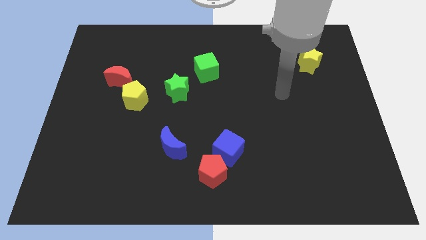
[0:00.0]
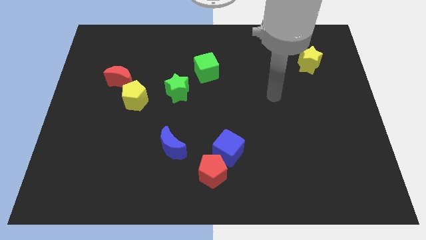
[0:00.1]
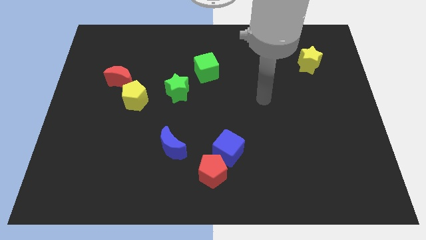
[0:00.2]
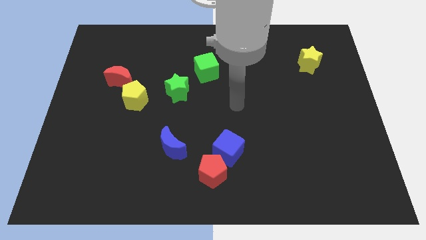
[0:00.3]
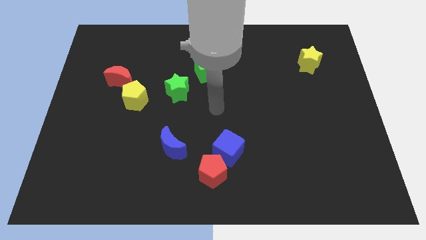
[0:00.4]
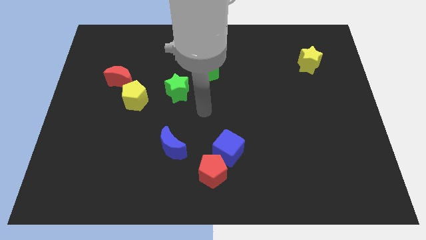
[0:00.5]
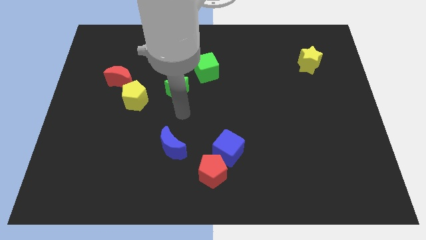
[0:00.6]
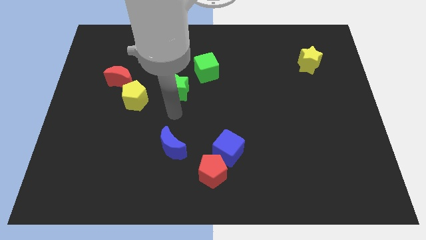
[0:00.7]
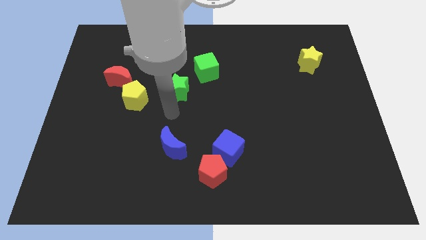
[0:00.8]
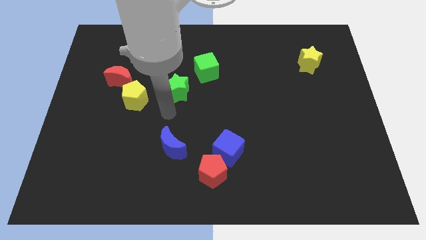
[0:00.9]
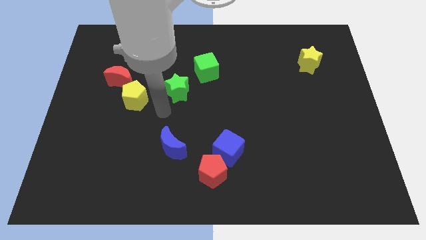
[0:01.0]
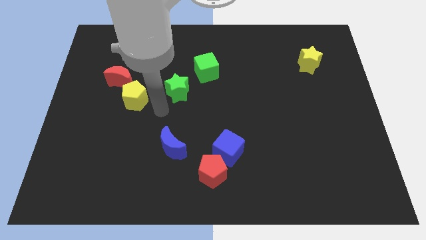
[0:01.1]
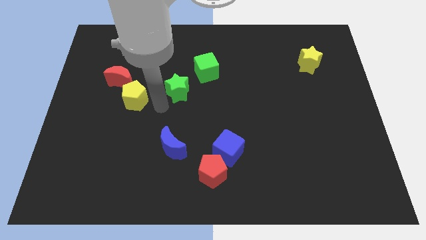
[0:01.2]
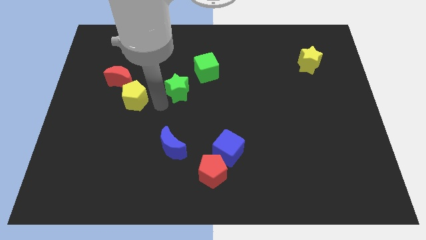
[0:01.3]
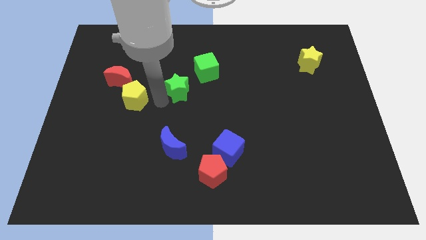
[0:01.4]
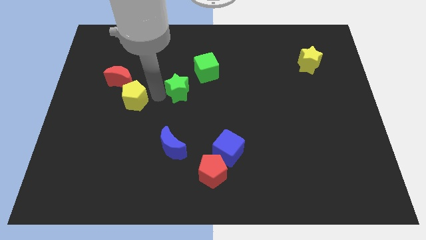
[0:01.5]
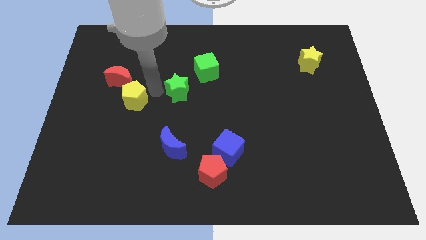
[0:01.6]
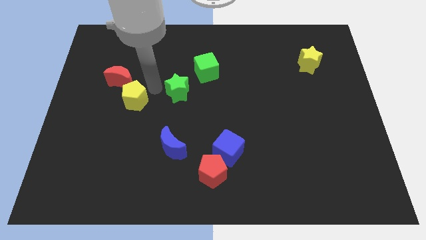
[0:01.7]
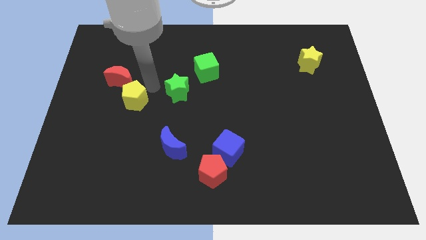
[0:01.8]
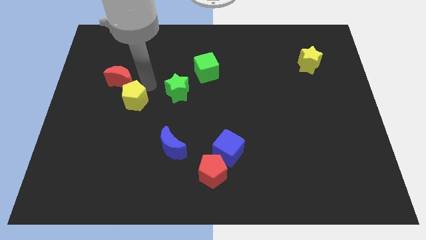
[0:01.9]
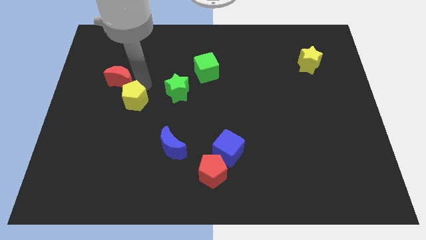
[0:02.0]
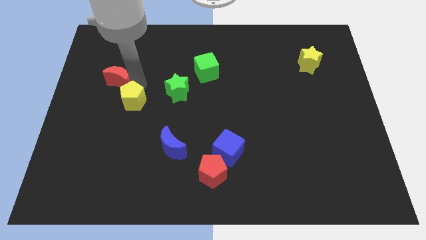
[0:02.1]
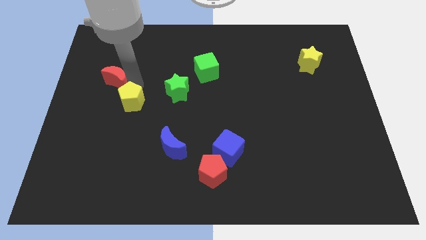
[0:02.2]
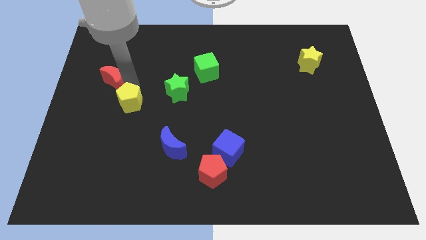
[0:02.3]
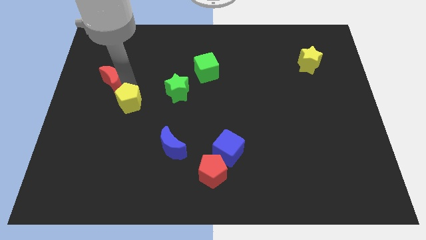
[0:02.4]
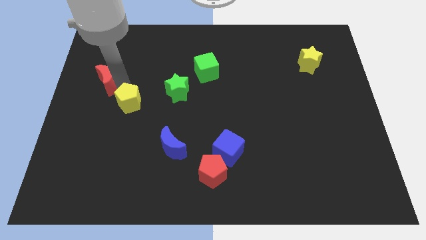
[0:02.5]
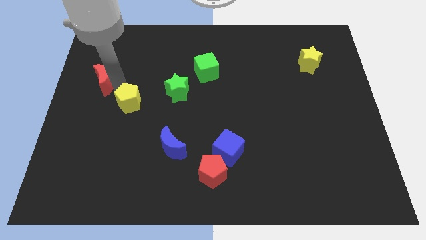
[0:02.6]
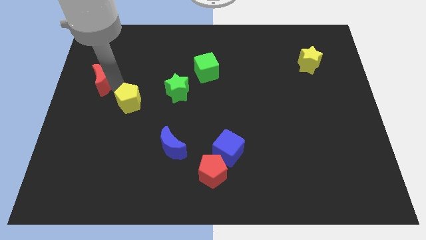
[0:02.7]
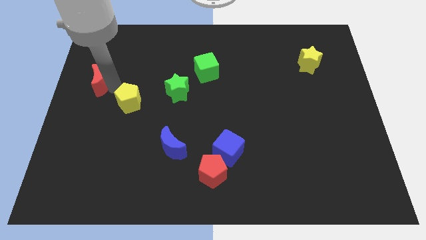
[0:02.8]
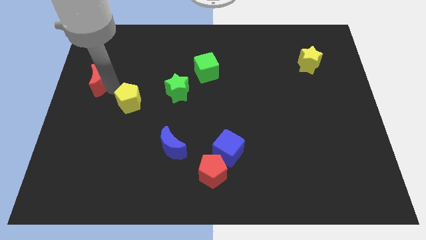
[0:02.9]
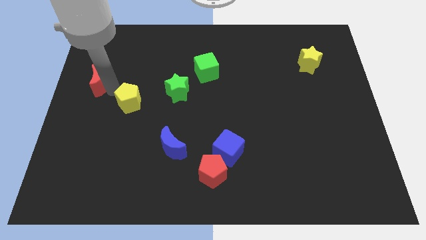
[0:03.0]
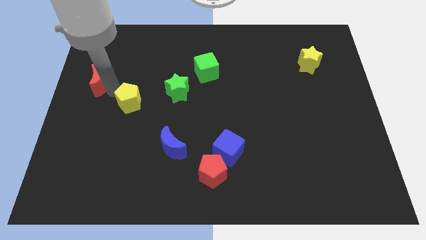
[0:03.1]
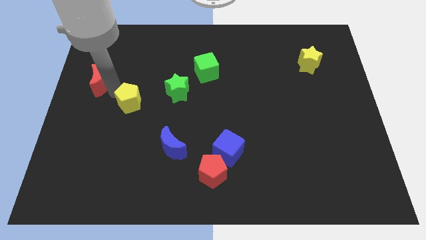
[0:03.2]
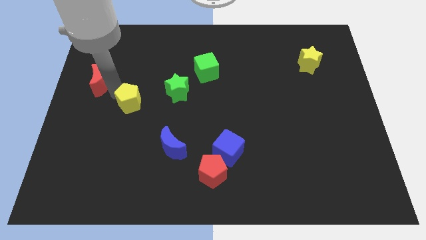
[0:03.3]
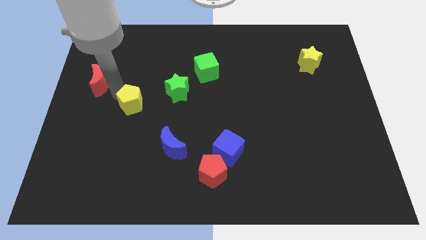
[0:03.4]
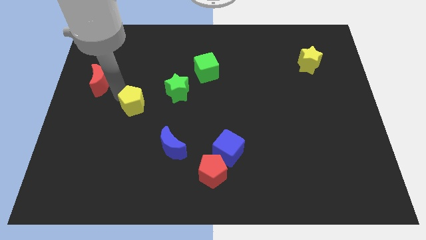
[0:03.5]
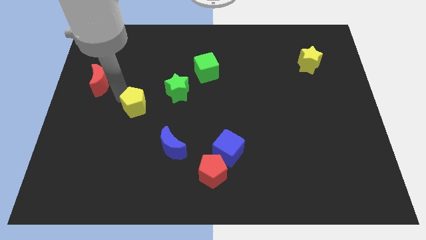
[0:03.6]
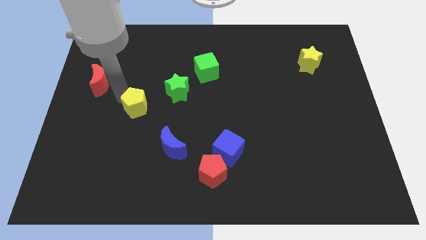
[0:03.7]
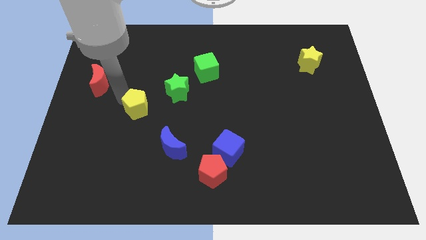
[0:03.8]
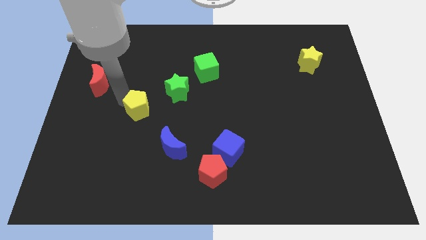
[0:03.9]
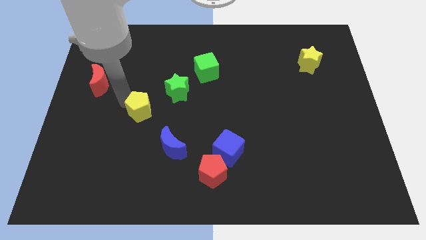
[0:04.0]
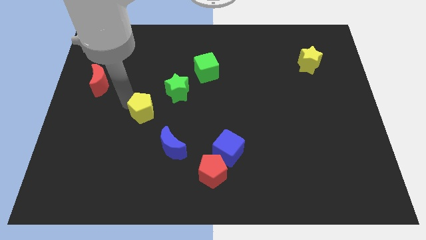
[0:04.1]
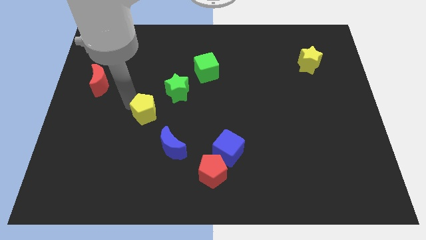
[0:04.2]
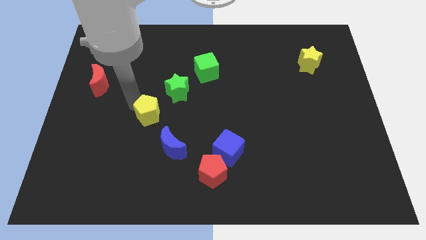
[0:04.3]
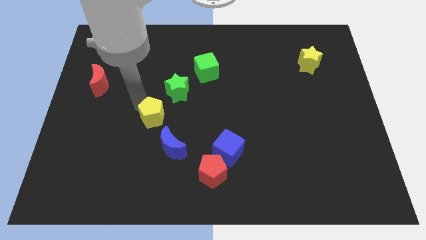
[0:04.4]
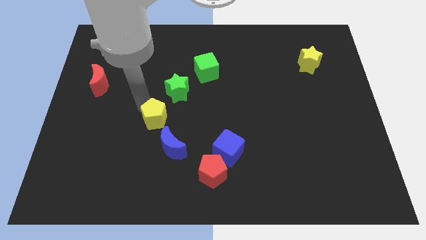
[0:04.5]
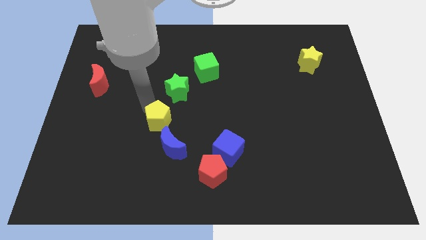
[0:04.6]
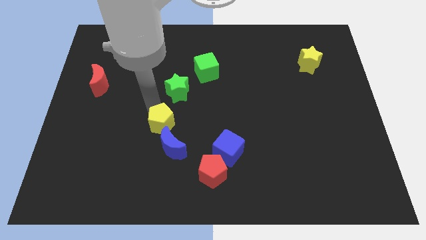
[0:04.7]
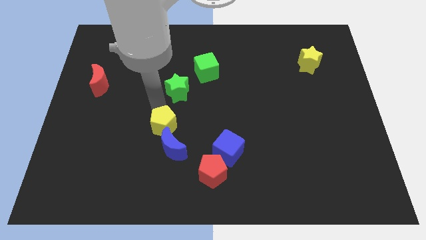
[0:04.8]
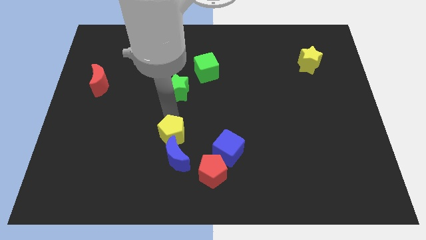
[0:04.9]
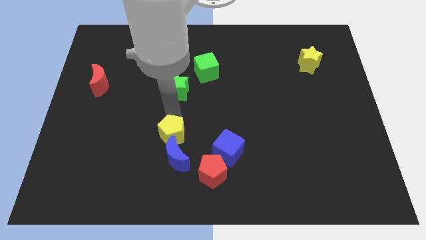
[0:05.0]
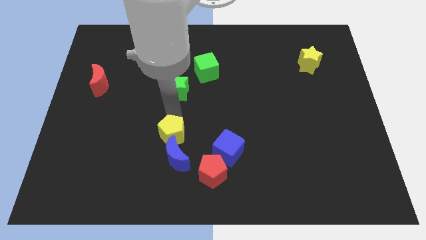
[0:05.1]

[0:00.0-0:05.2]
put the yellow pentagon towards the blue moon

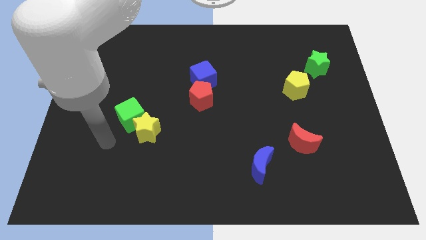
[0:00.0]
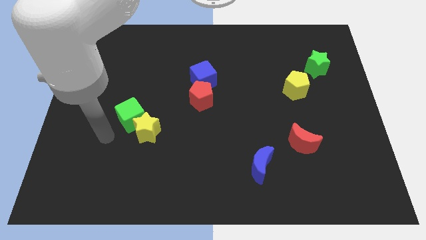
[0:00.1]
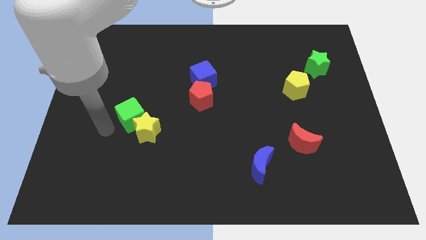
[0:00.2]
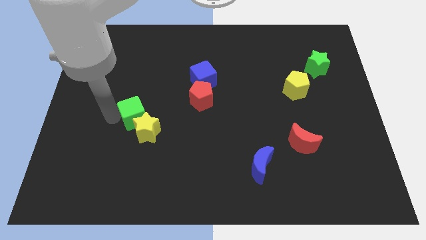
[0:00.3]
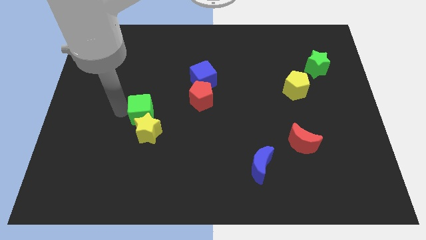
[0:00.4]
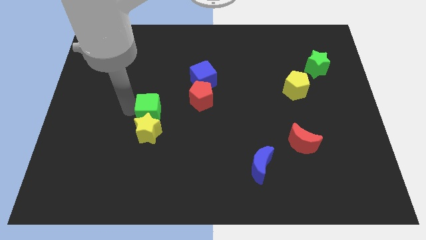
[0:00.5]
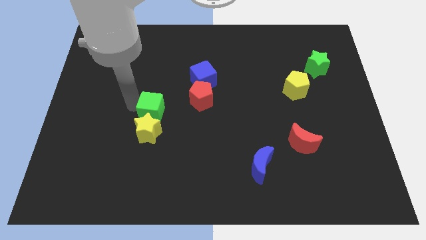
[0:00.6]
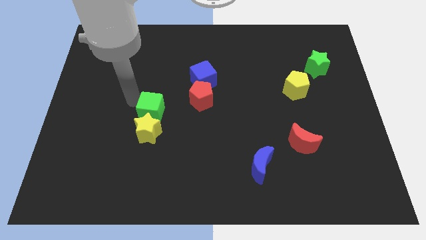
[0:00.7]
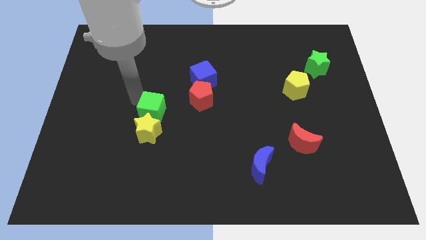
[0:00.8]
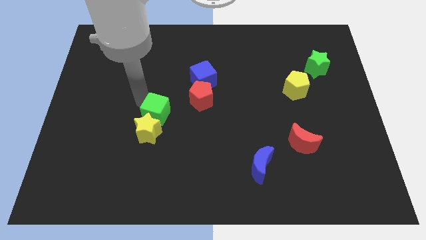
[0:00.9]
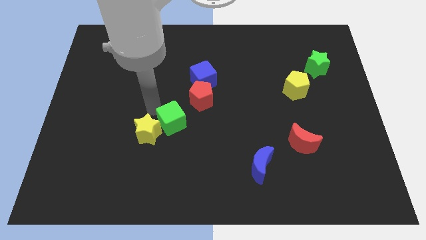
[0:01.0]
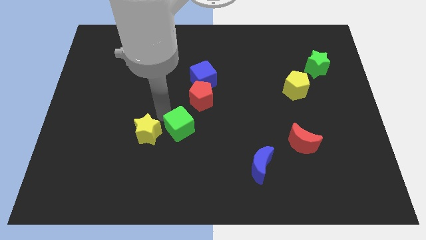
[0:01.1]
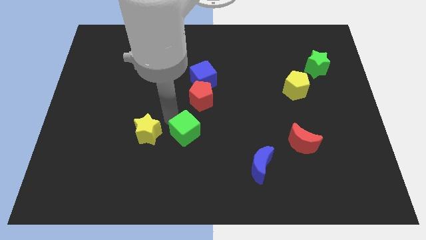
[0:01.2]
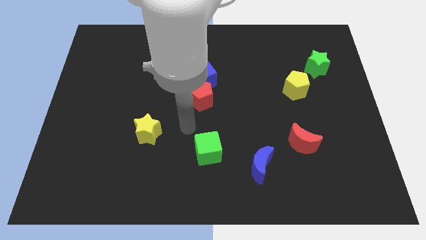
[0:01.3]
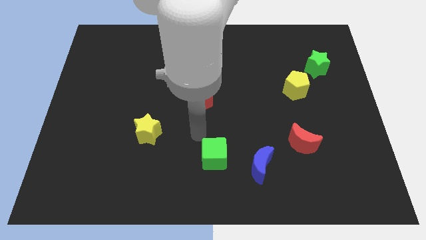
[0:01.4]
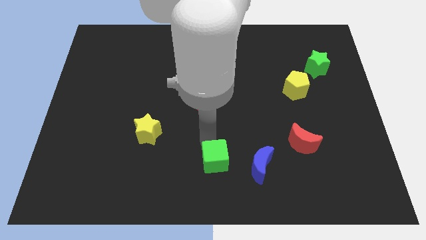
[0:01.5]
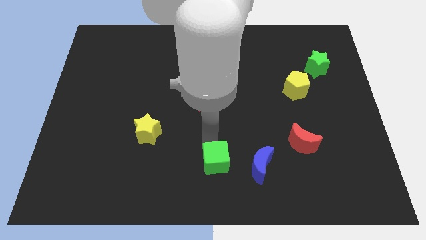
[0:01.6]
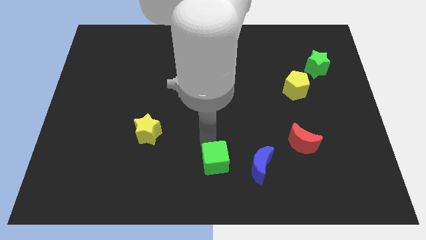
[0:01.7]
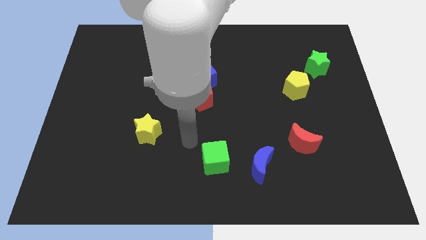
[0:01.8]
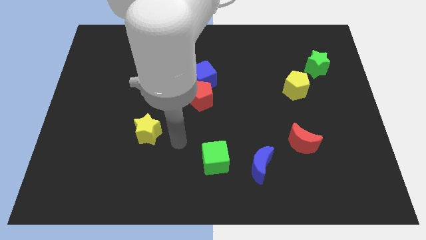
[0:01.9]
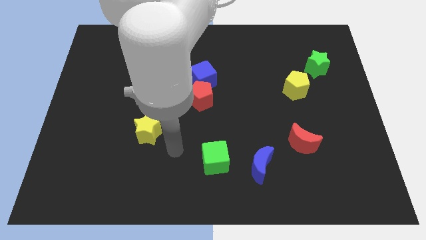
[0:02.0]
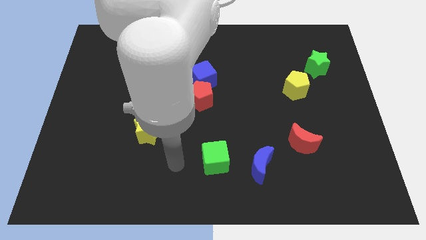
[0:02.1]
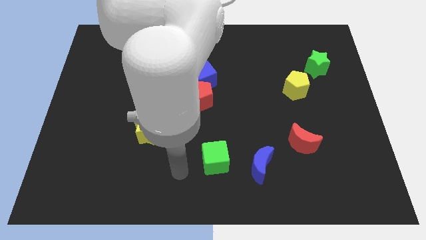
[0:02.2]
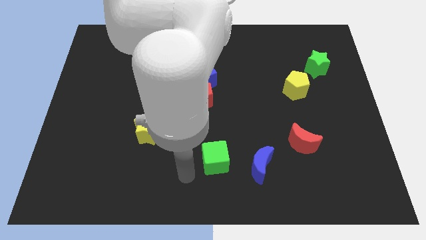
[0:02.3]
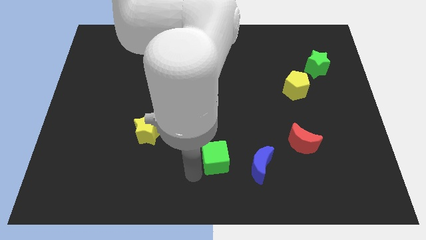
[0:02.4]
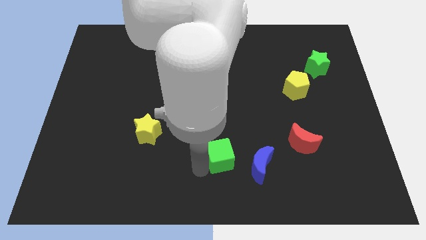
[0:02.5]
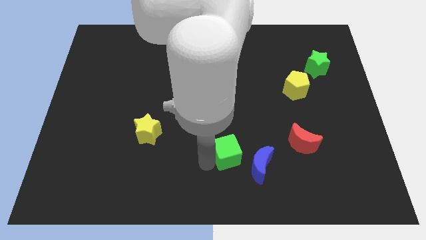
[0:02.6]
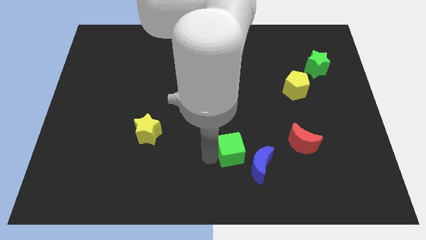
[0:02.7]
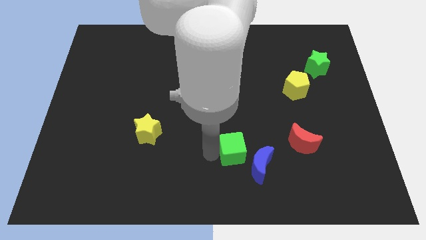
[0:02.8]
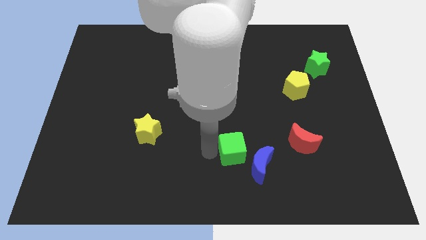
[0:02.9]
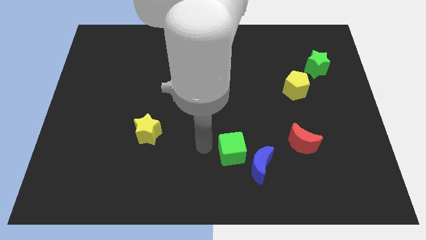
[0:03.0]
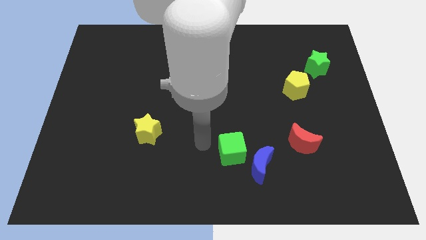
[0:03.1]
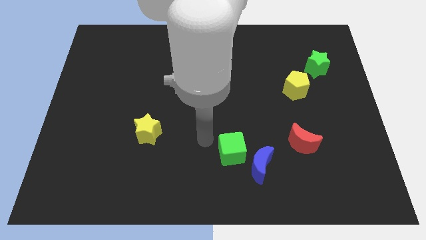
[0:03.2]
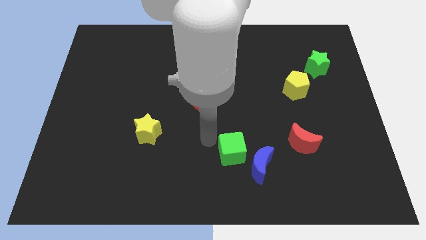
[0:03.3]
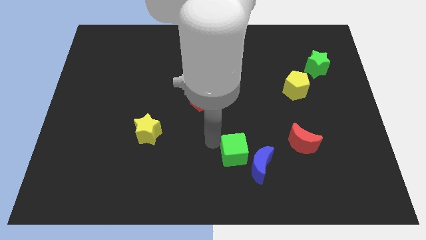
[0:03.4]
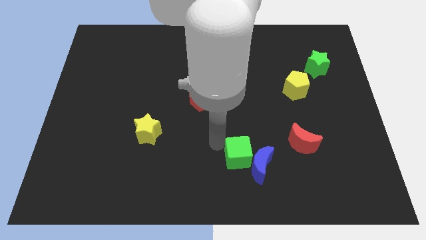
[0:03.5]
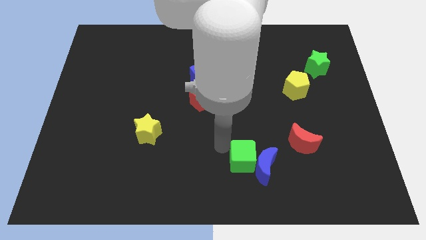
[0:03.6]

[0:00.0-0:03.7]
put the green cube towards the blue moon
